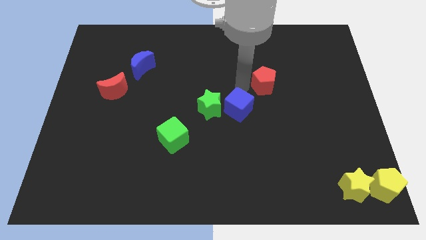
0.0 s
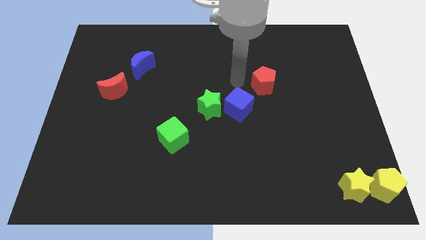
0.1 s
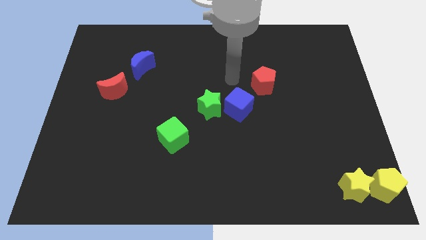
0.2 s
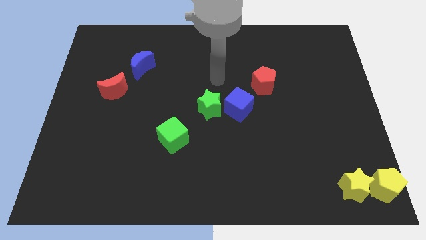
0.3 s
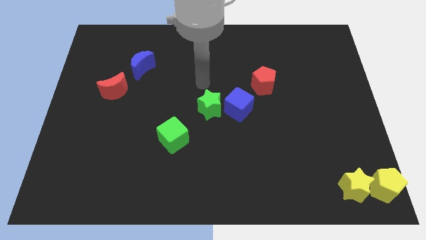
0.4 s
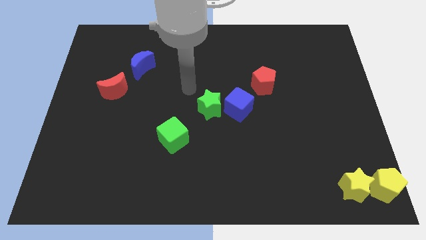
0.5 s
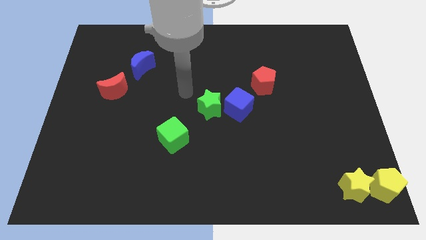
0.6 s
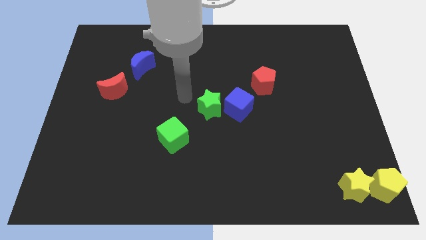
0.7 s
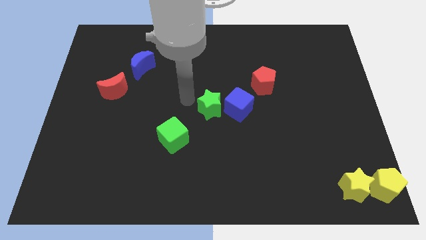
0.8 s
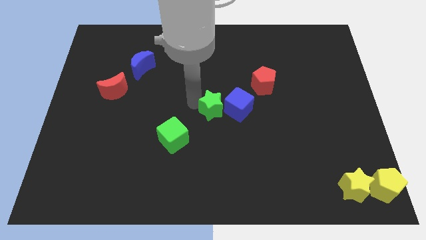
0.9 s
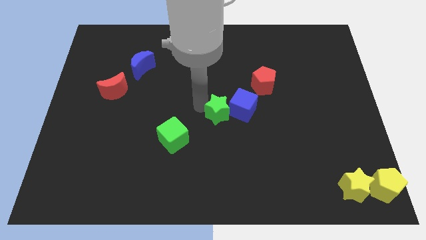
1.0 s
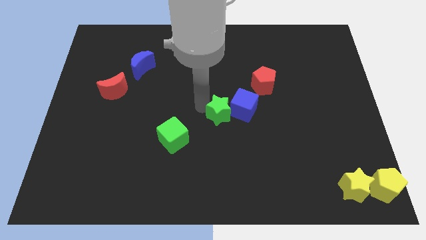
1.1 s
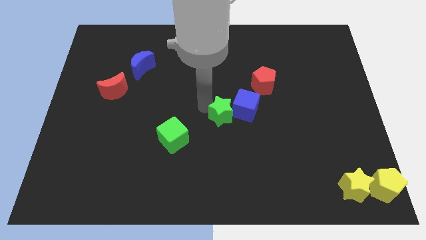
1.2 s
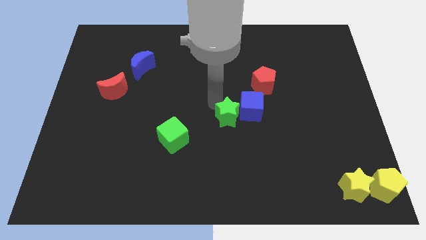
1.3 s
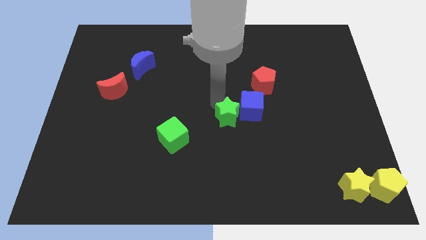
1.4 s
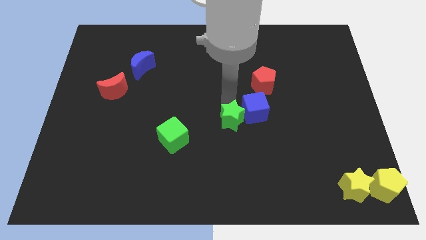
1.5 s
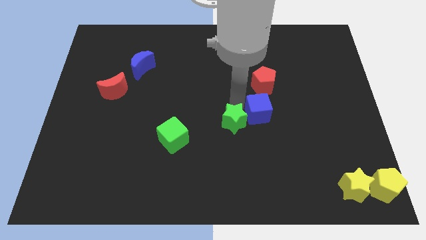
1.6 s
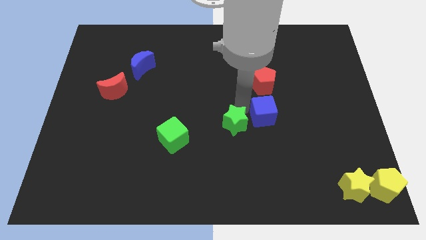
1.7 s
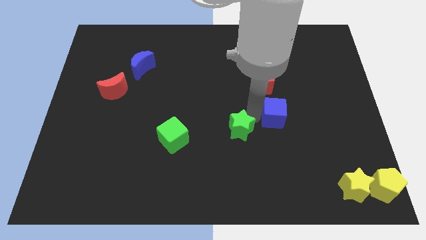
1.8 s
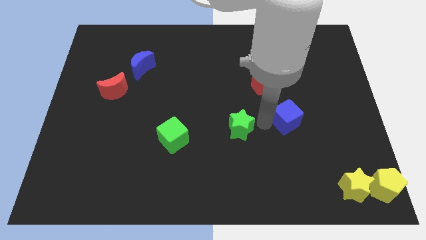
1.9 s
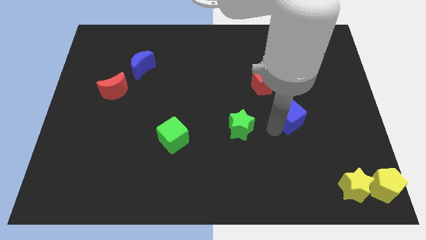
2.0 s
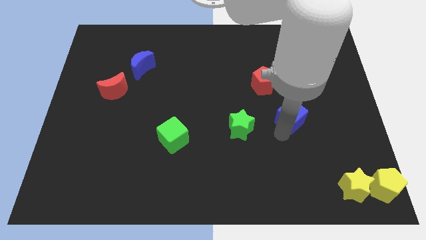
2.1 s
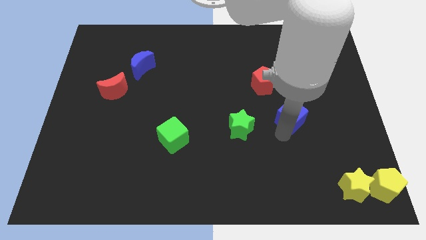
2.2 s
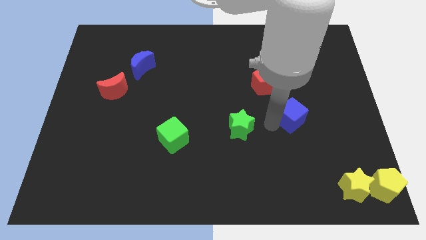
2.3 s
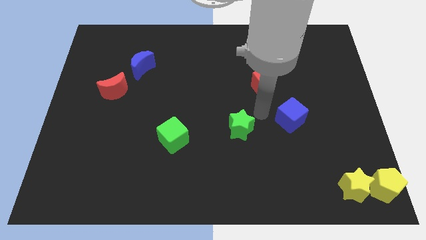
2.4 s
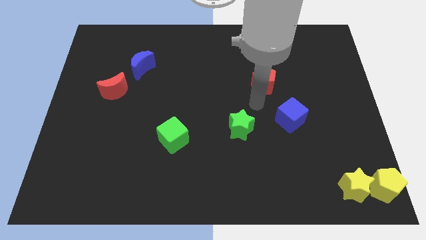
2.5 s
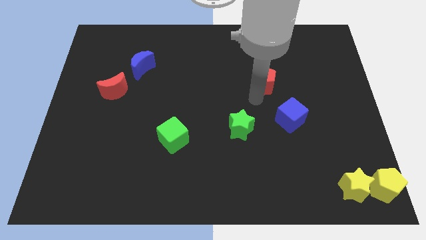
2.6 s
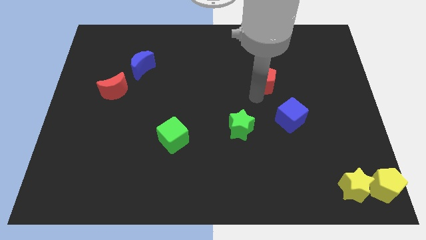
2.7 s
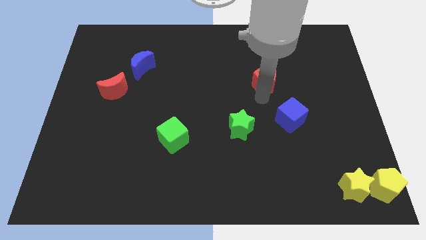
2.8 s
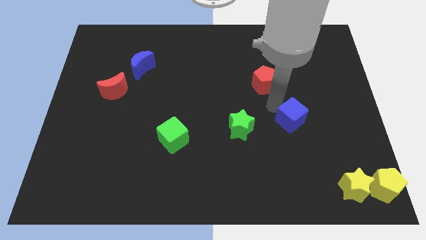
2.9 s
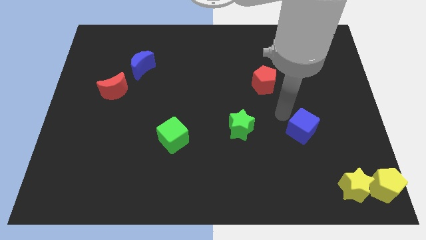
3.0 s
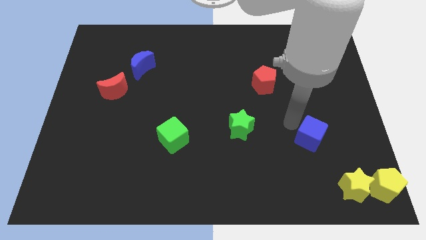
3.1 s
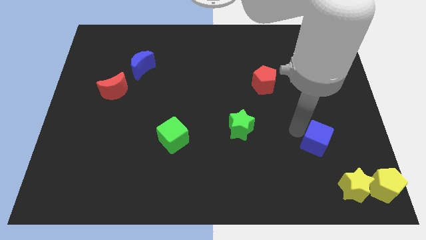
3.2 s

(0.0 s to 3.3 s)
separate the green star blue cube and the red pentagon

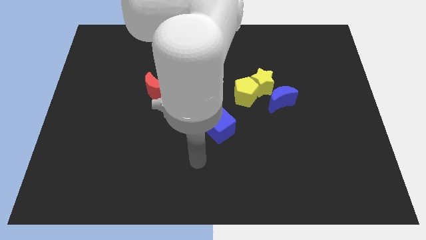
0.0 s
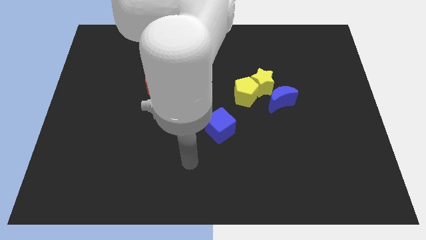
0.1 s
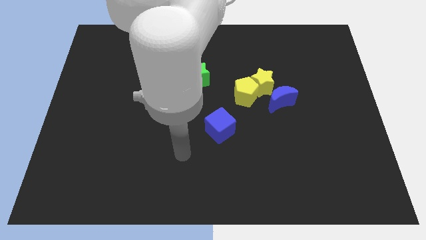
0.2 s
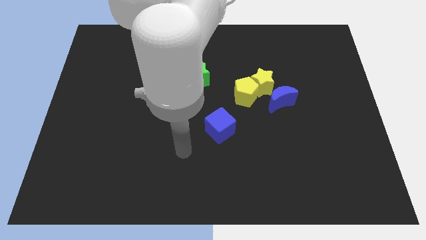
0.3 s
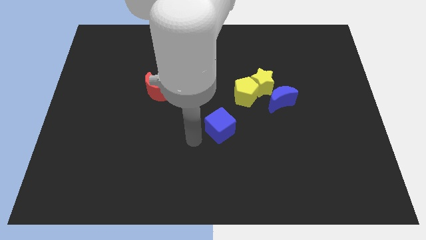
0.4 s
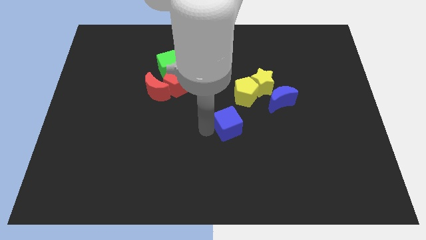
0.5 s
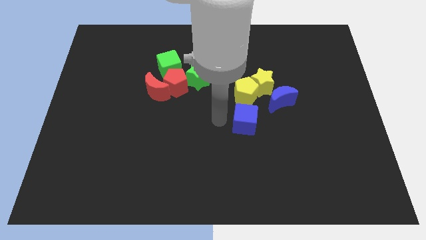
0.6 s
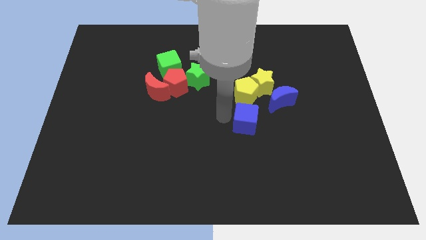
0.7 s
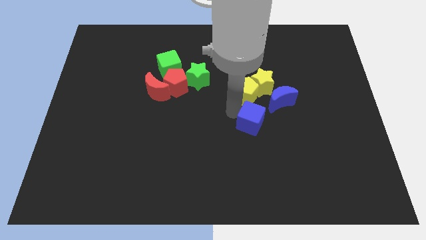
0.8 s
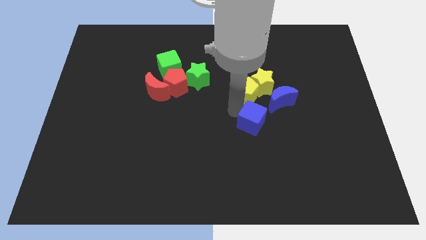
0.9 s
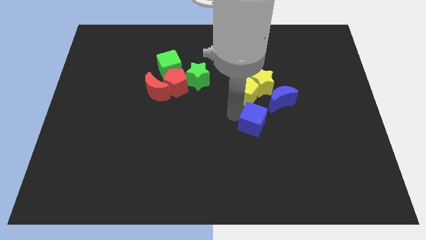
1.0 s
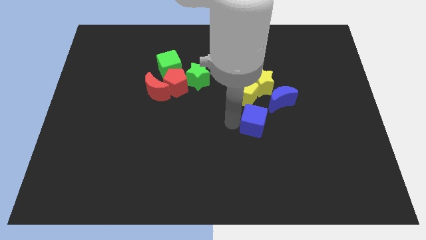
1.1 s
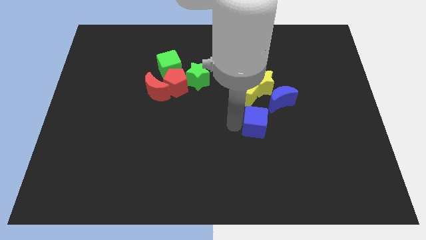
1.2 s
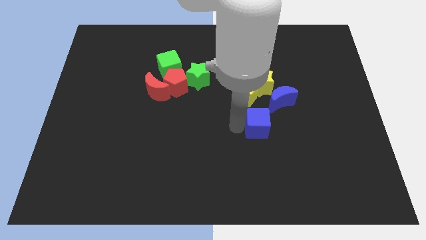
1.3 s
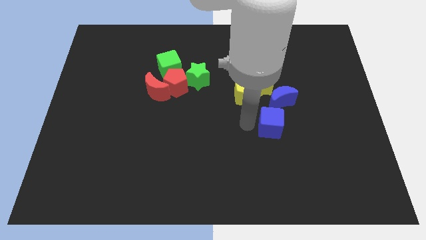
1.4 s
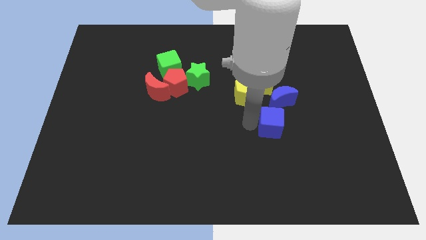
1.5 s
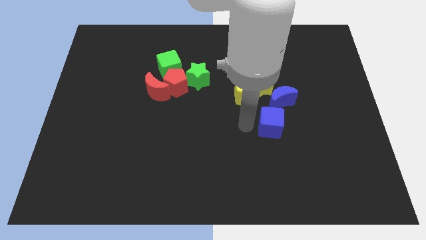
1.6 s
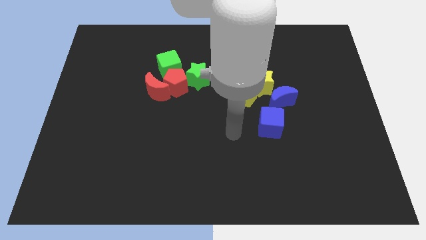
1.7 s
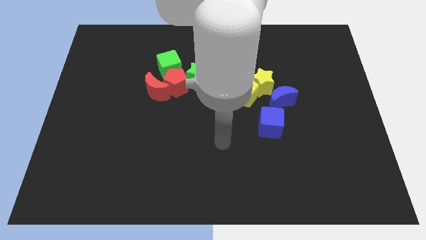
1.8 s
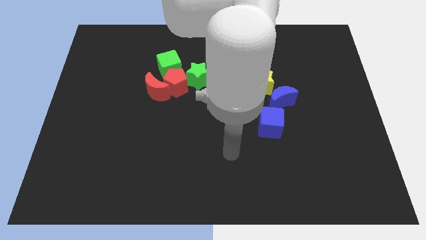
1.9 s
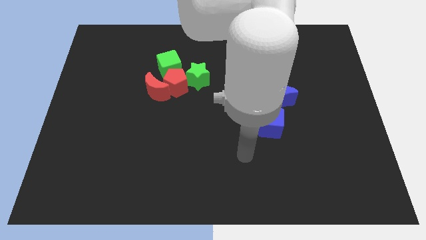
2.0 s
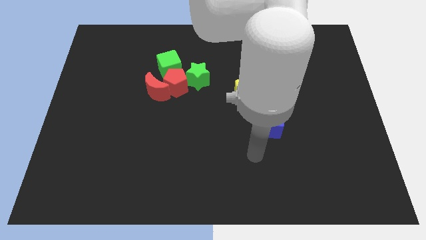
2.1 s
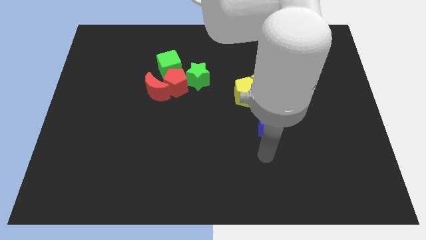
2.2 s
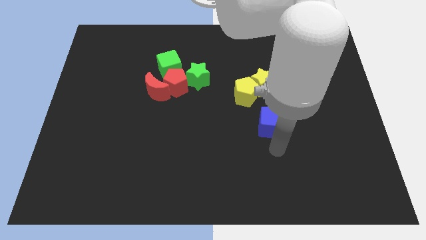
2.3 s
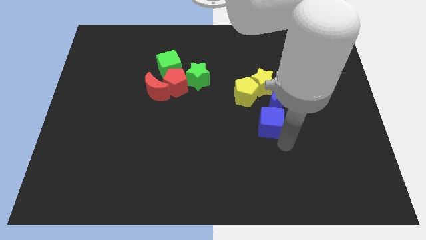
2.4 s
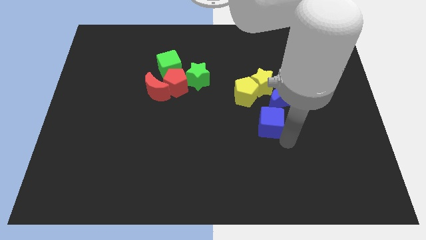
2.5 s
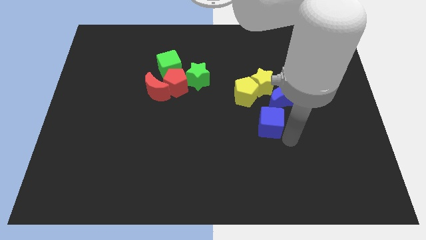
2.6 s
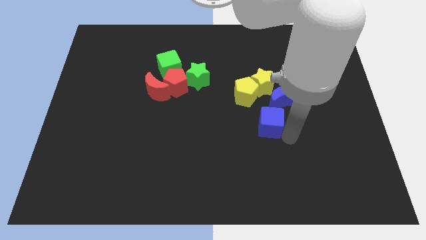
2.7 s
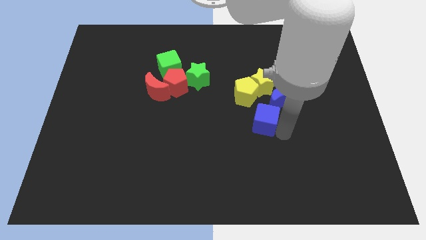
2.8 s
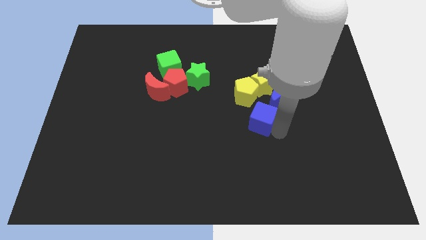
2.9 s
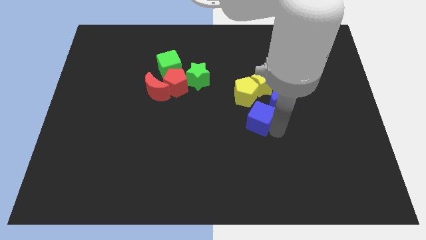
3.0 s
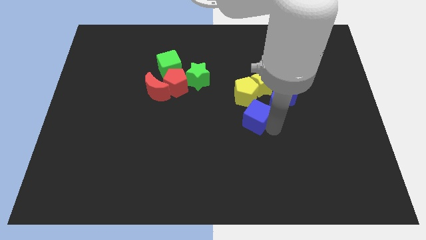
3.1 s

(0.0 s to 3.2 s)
slide blue cube towards blue moon

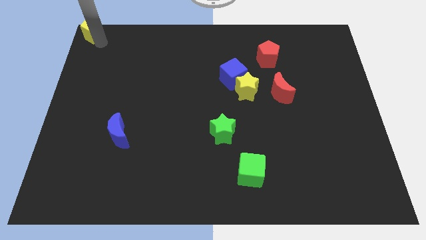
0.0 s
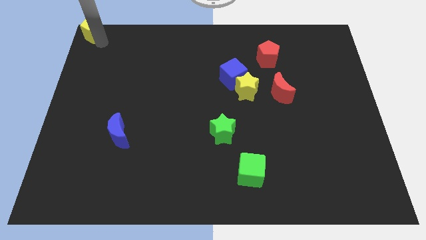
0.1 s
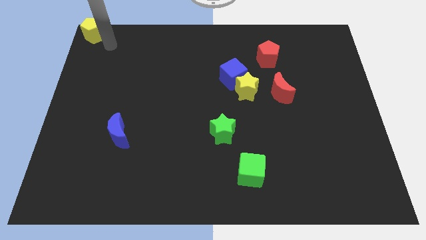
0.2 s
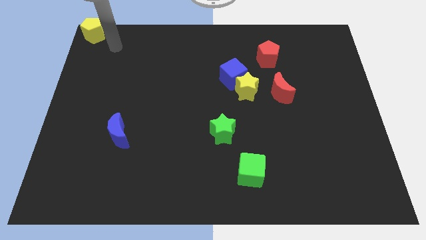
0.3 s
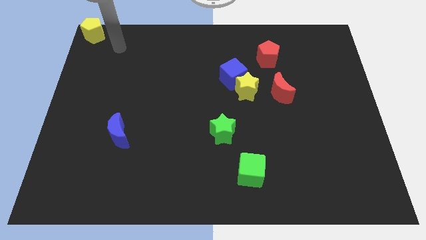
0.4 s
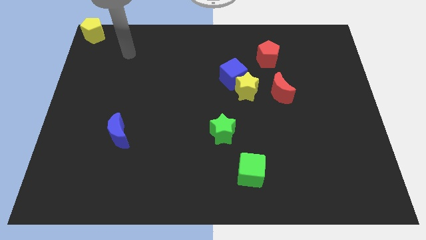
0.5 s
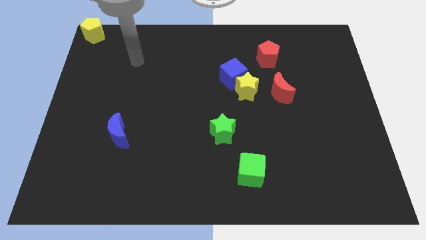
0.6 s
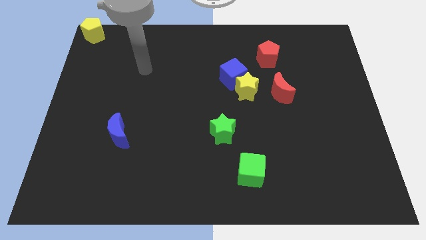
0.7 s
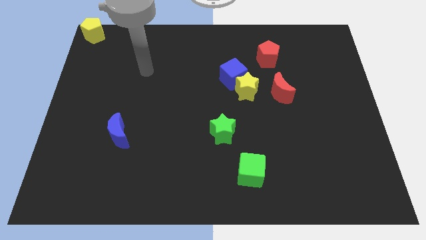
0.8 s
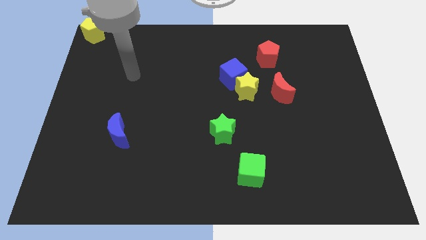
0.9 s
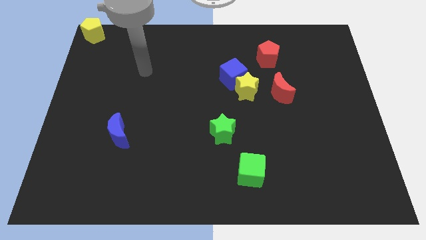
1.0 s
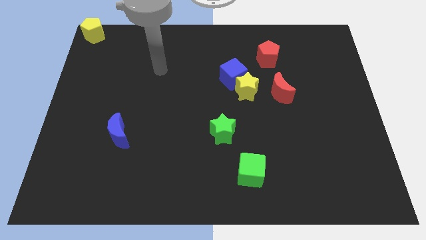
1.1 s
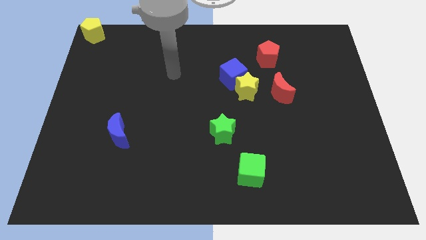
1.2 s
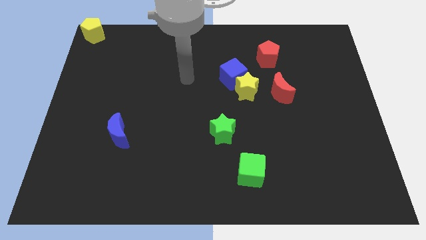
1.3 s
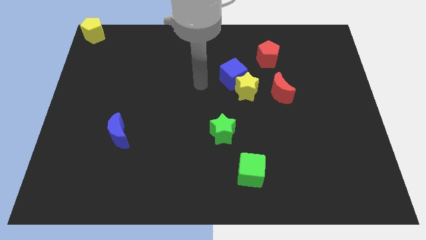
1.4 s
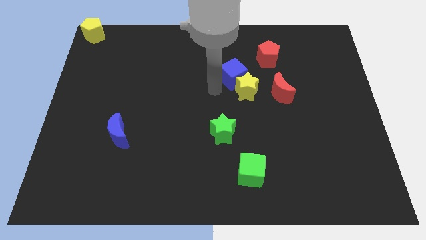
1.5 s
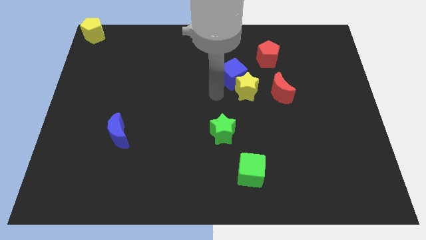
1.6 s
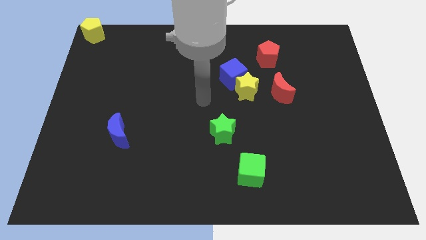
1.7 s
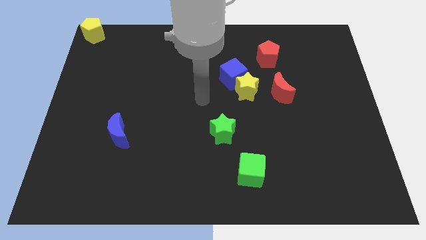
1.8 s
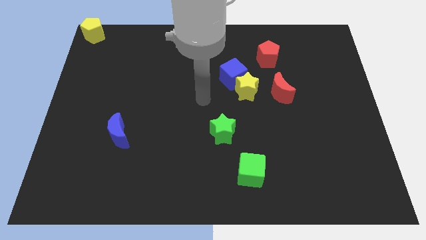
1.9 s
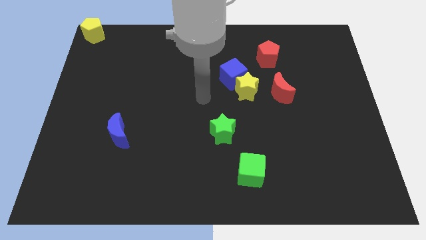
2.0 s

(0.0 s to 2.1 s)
move your hand away from yellow pentagon

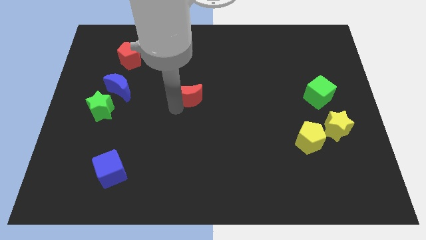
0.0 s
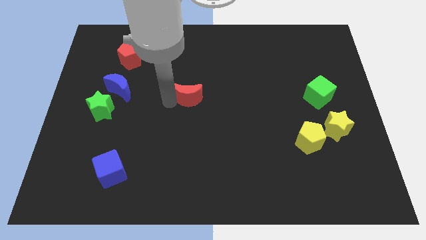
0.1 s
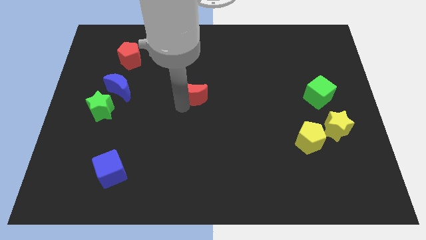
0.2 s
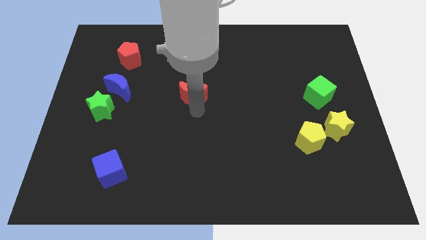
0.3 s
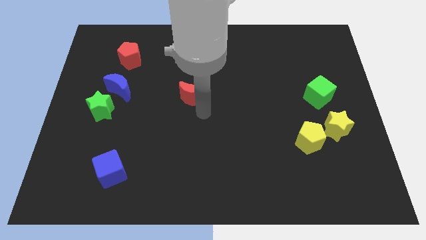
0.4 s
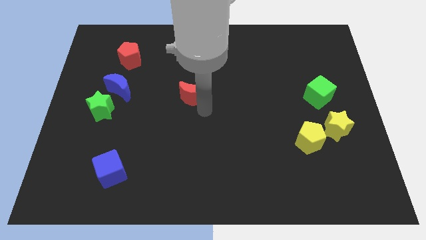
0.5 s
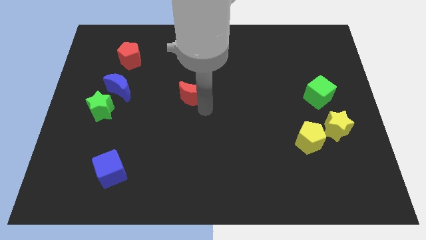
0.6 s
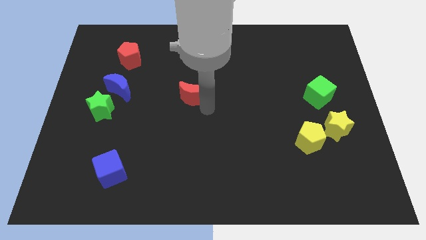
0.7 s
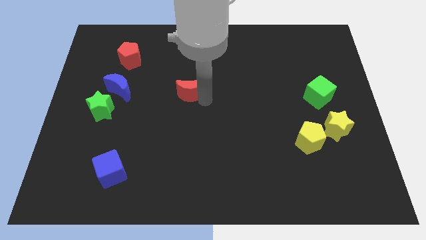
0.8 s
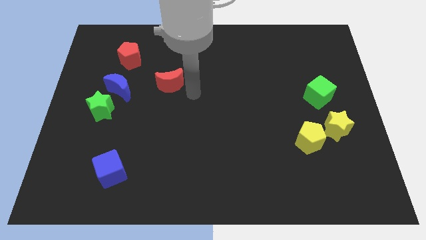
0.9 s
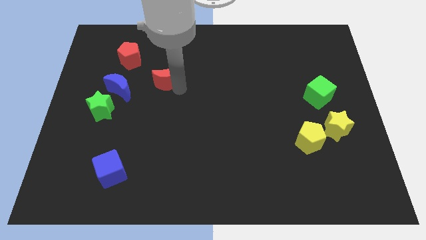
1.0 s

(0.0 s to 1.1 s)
move the red crescent towards red pentagon
